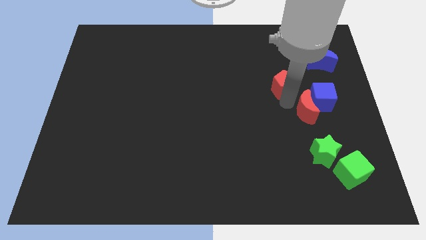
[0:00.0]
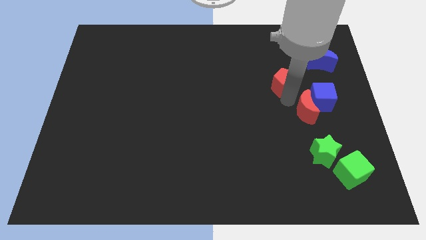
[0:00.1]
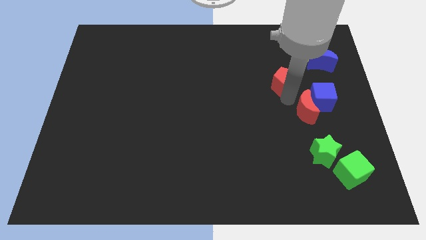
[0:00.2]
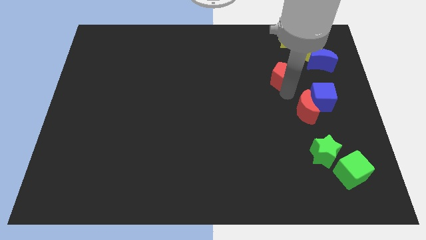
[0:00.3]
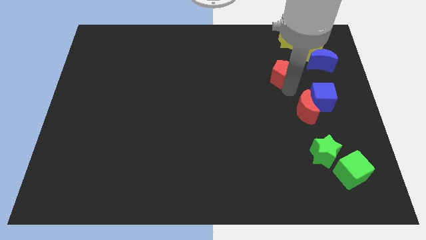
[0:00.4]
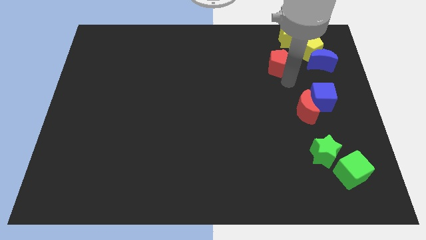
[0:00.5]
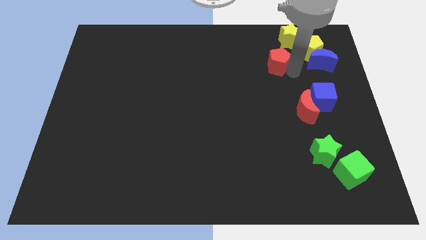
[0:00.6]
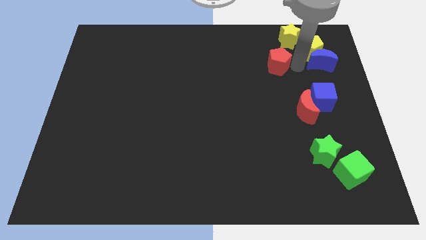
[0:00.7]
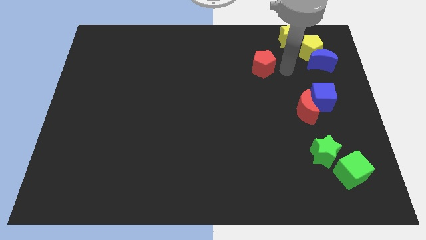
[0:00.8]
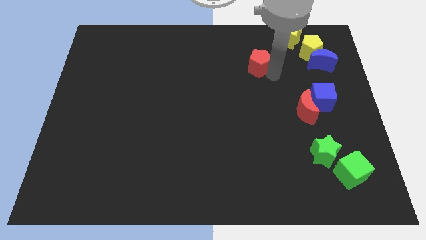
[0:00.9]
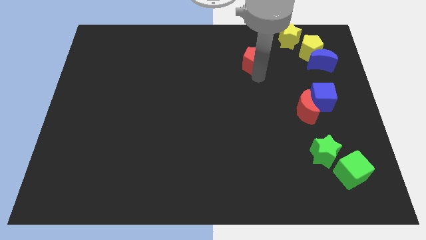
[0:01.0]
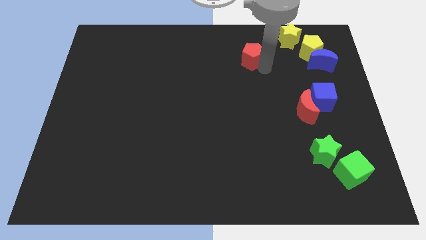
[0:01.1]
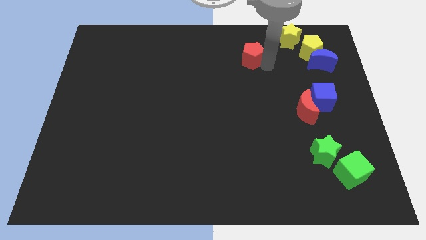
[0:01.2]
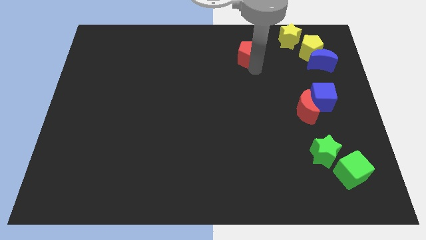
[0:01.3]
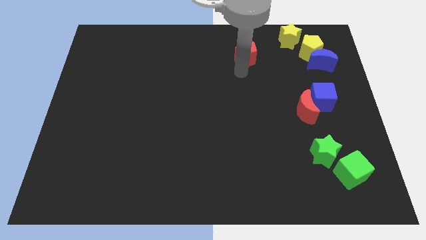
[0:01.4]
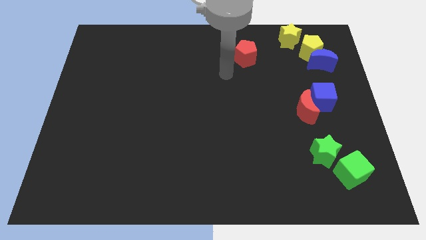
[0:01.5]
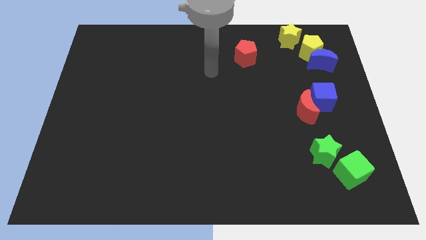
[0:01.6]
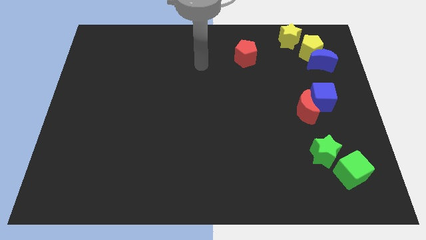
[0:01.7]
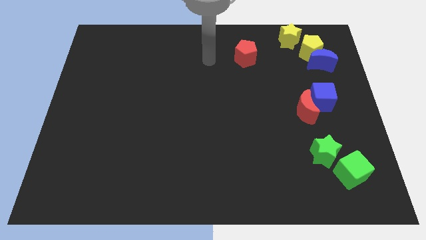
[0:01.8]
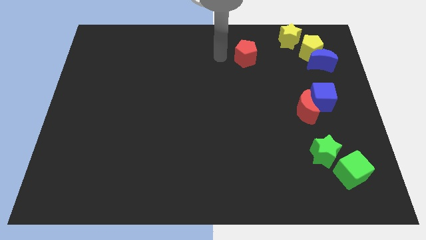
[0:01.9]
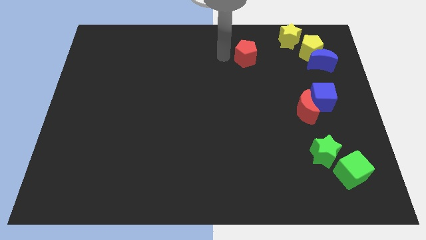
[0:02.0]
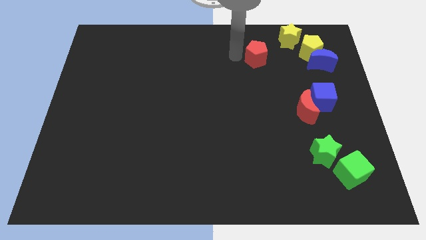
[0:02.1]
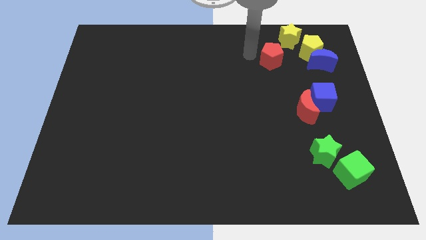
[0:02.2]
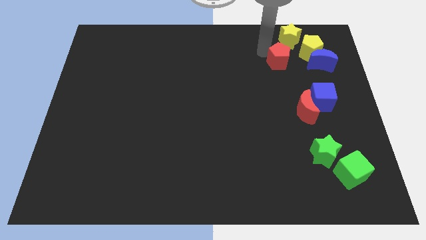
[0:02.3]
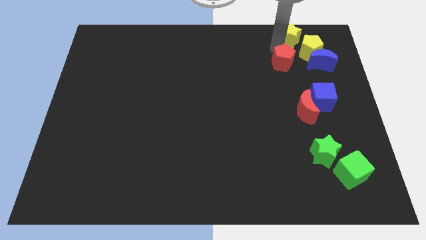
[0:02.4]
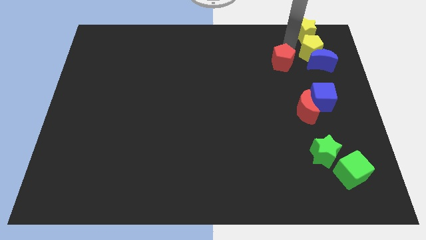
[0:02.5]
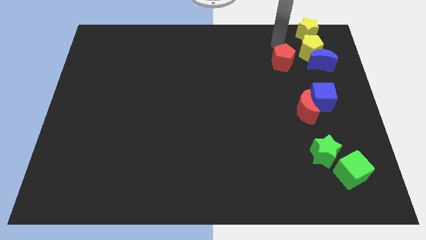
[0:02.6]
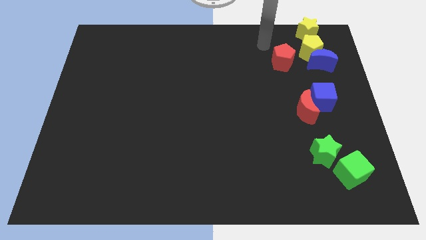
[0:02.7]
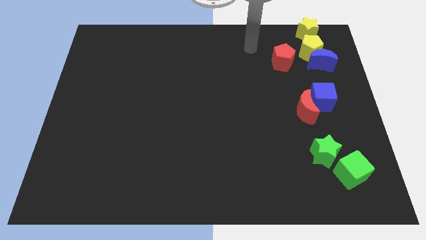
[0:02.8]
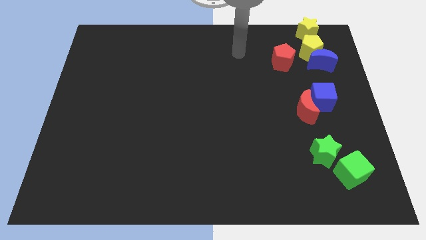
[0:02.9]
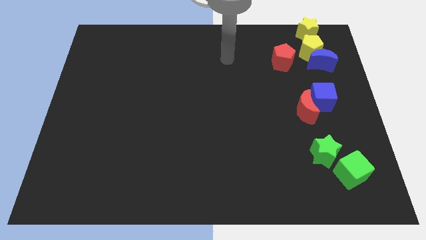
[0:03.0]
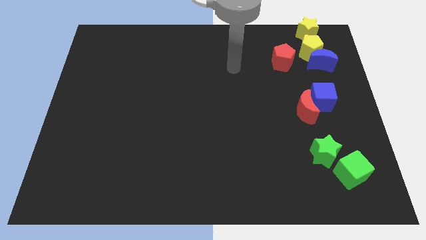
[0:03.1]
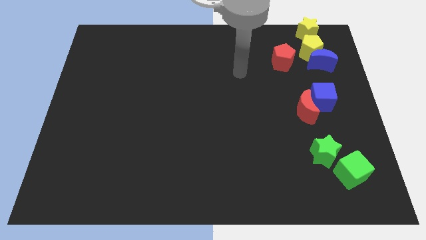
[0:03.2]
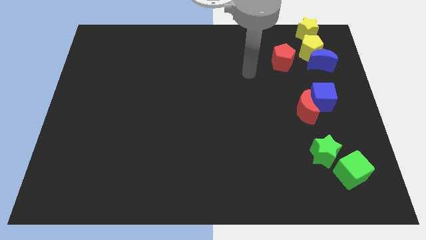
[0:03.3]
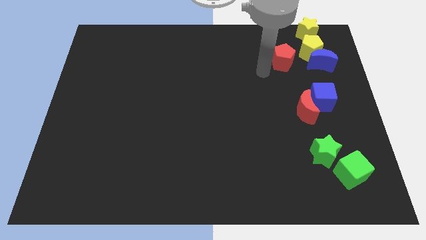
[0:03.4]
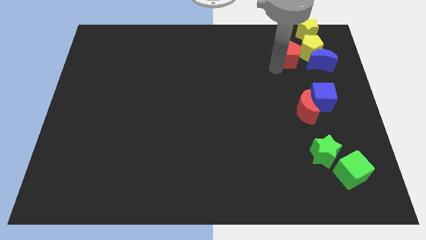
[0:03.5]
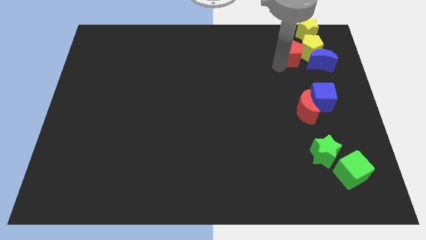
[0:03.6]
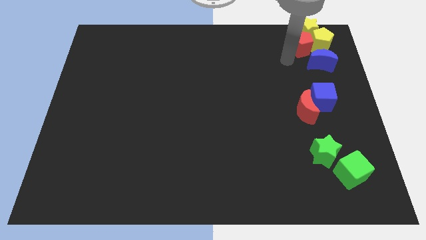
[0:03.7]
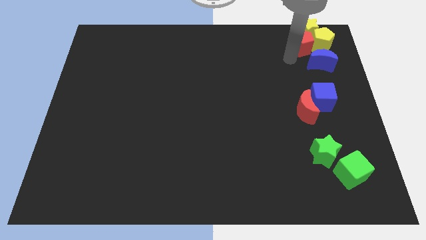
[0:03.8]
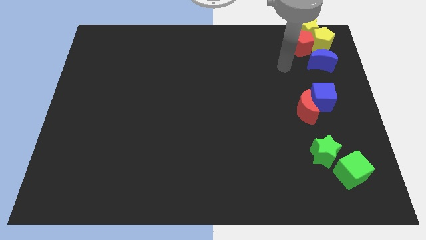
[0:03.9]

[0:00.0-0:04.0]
push the red pentagon into the yellow pentagon

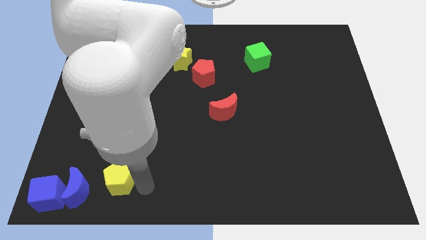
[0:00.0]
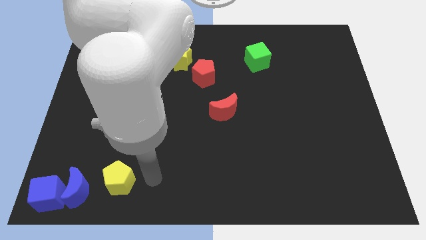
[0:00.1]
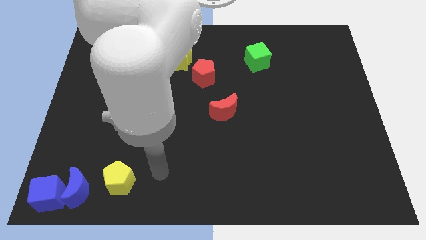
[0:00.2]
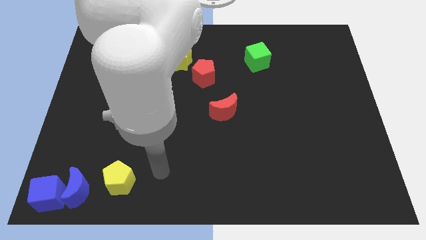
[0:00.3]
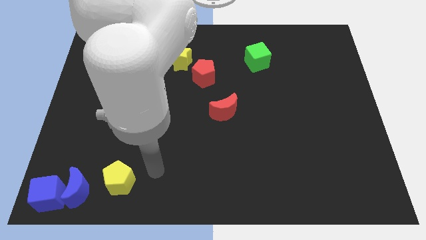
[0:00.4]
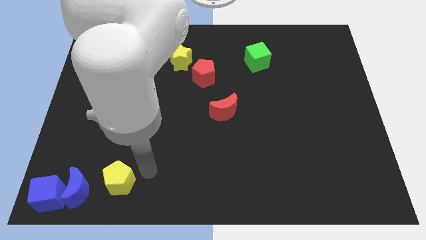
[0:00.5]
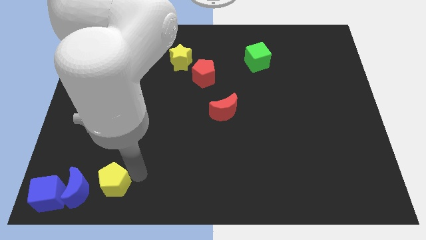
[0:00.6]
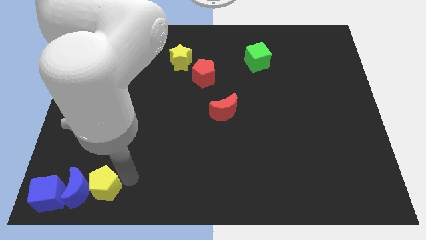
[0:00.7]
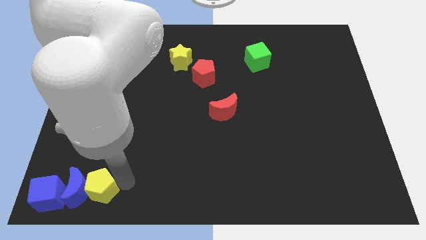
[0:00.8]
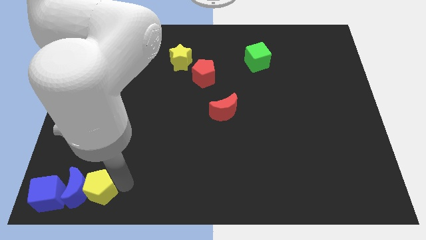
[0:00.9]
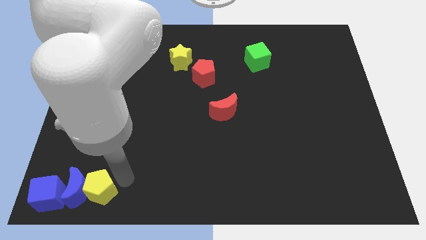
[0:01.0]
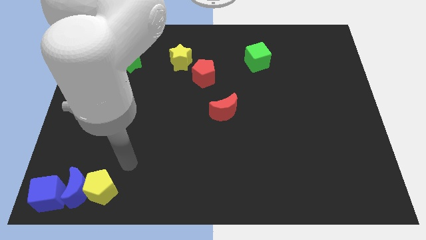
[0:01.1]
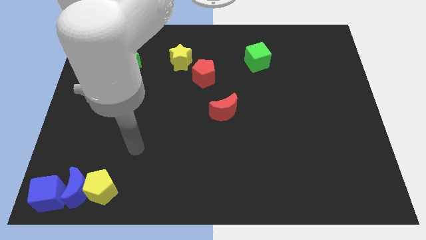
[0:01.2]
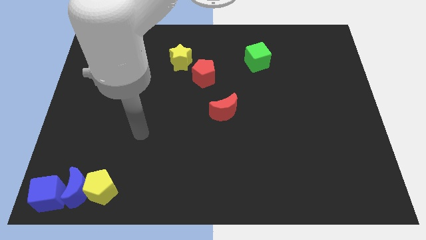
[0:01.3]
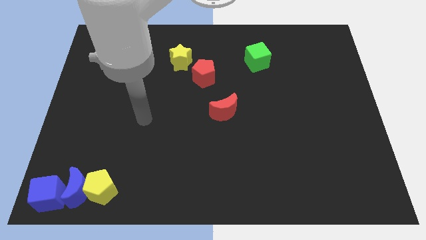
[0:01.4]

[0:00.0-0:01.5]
place yellow pentagon beside blue crescent

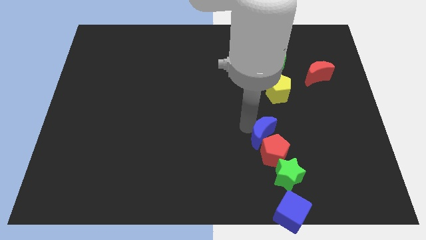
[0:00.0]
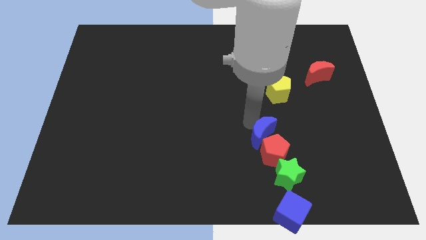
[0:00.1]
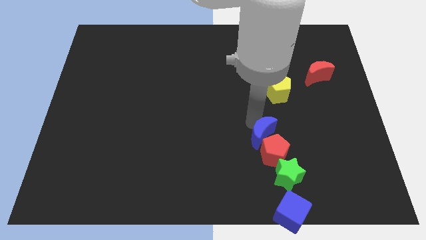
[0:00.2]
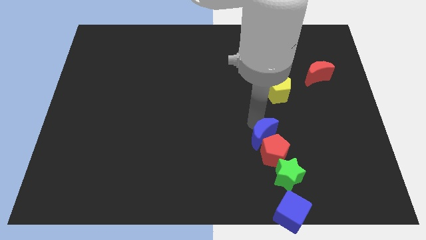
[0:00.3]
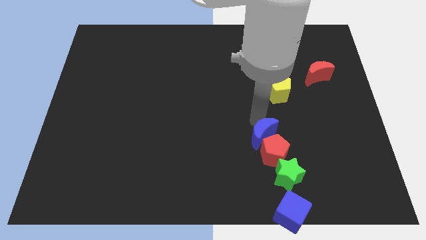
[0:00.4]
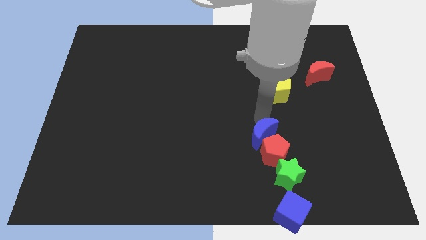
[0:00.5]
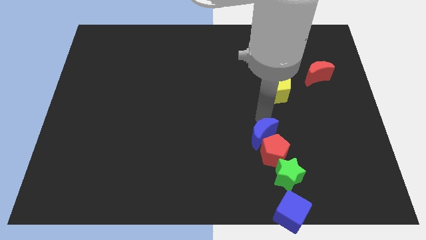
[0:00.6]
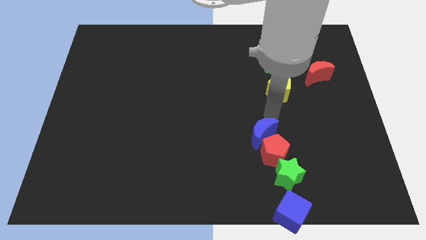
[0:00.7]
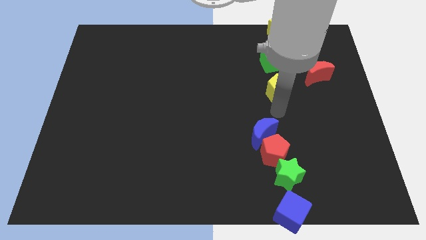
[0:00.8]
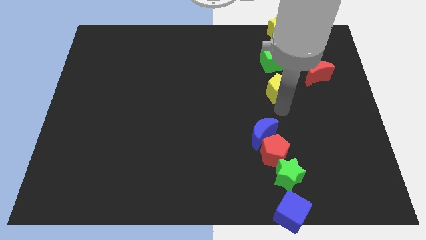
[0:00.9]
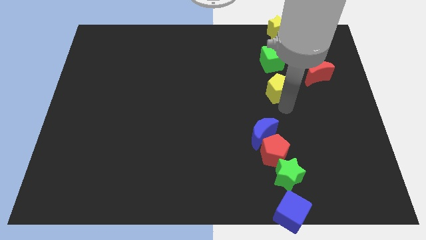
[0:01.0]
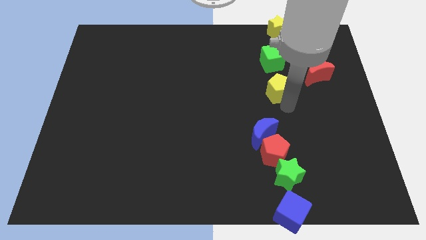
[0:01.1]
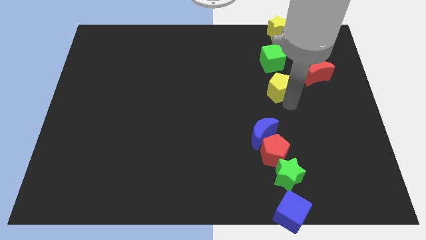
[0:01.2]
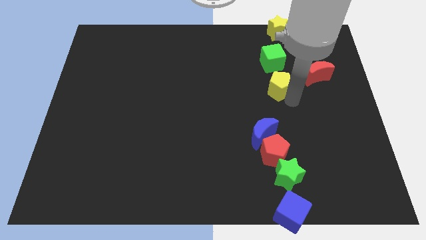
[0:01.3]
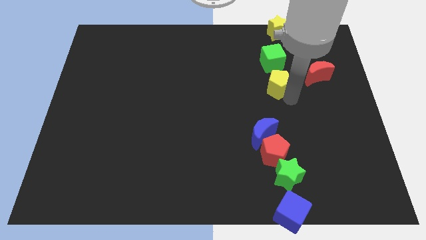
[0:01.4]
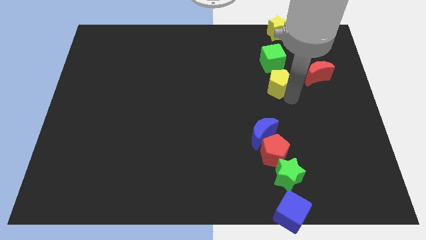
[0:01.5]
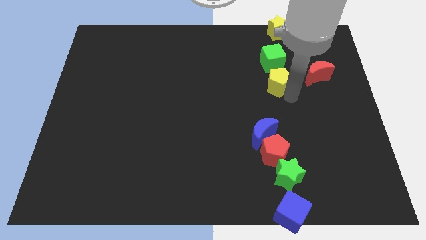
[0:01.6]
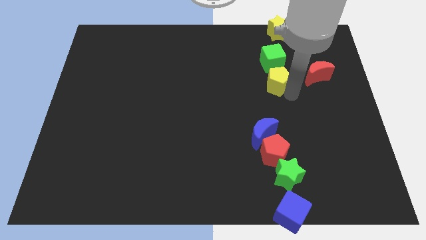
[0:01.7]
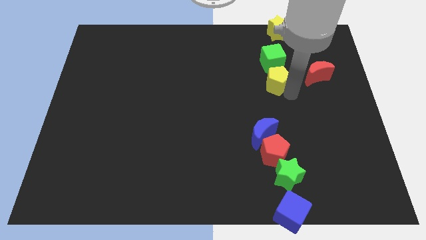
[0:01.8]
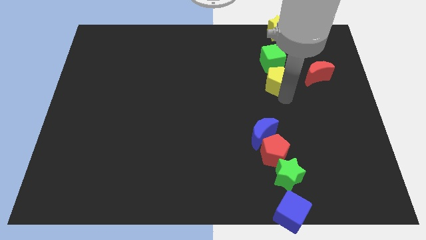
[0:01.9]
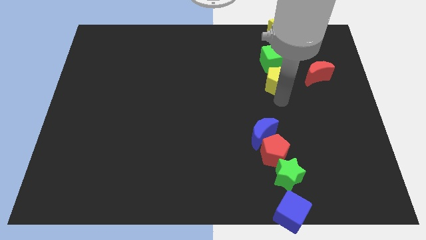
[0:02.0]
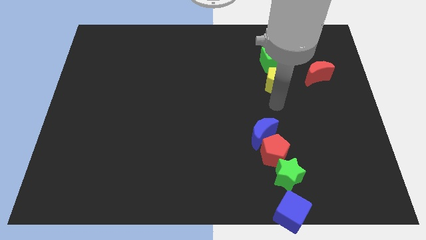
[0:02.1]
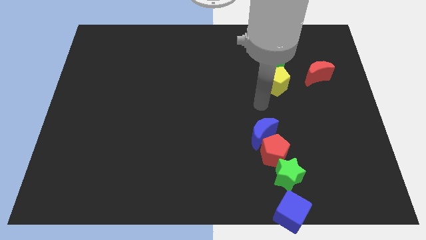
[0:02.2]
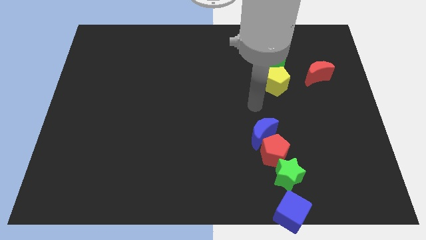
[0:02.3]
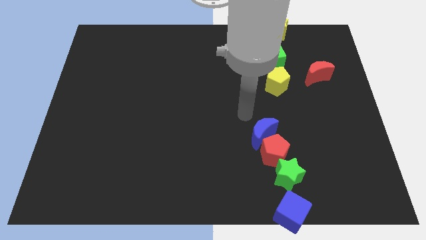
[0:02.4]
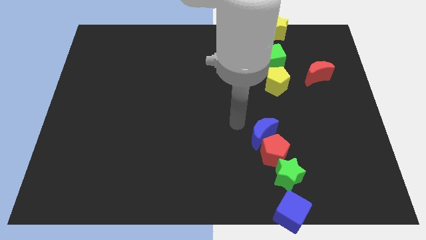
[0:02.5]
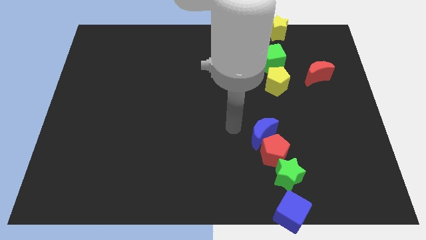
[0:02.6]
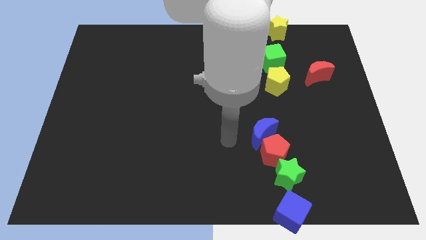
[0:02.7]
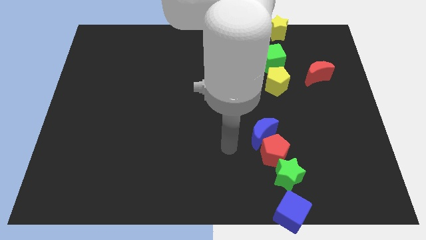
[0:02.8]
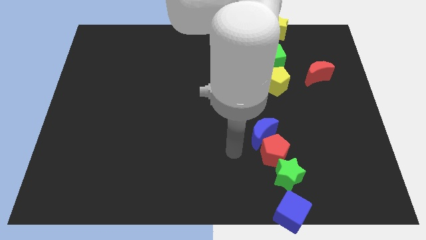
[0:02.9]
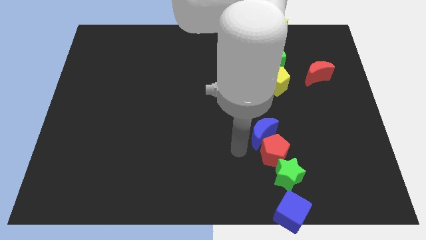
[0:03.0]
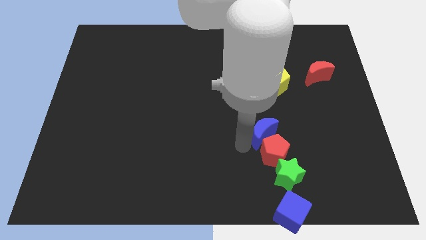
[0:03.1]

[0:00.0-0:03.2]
push the yellow pentagon close to the green cube
